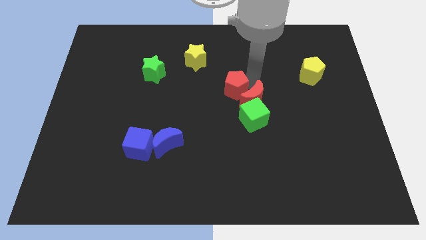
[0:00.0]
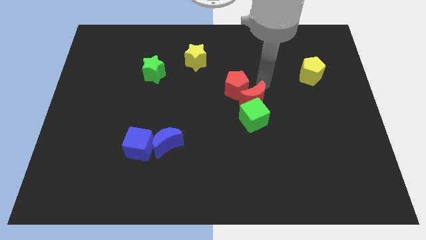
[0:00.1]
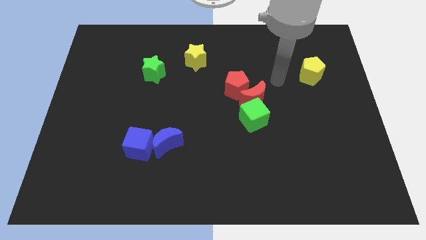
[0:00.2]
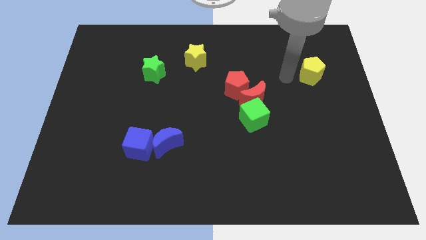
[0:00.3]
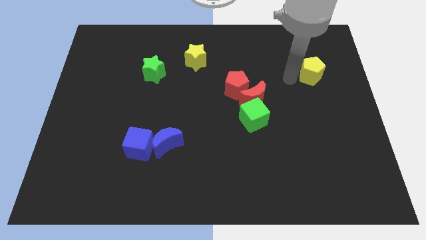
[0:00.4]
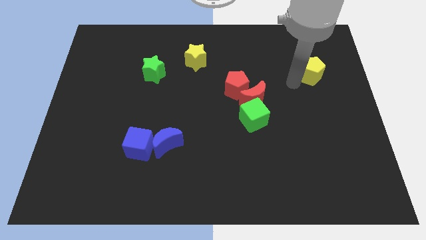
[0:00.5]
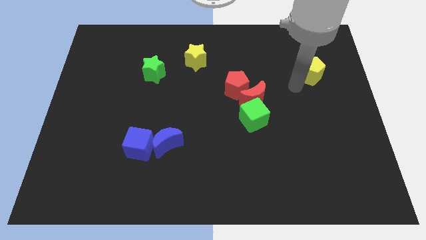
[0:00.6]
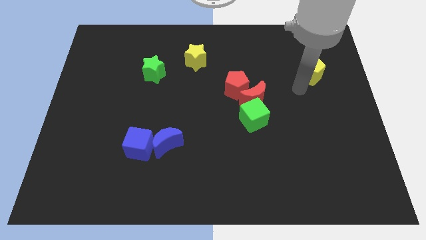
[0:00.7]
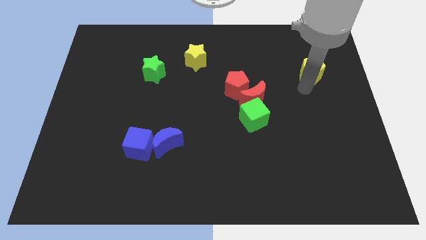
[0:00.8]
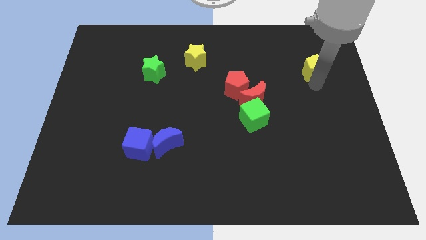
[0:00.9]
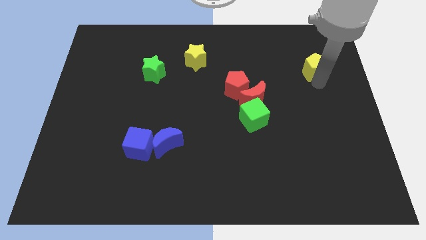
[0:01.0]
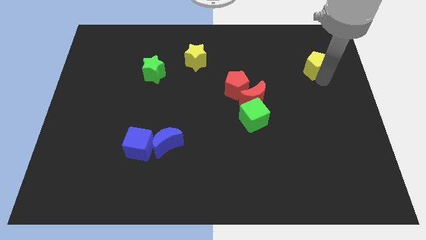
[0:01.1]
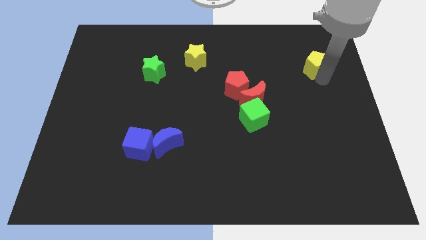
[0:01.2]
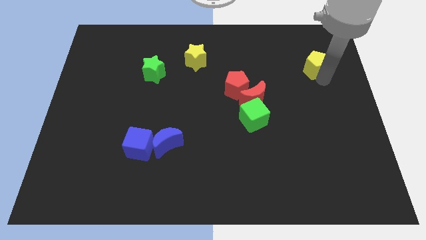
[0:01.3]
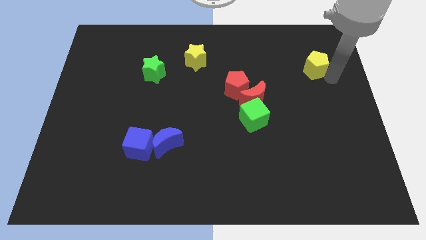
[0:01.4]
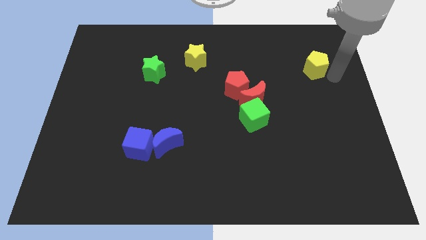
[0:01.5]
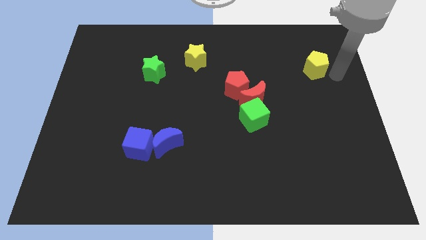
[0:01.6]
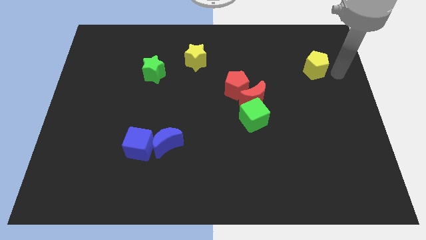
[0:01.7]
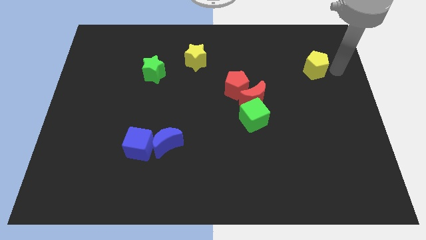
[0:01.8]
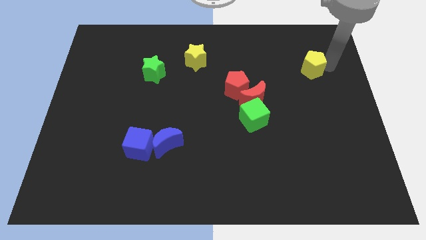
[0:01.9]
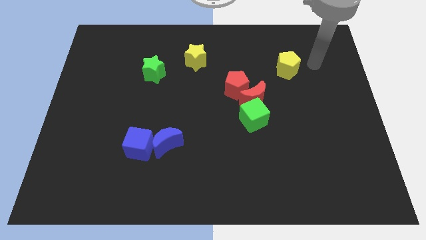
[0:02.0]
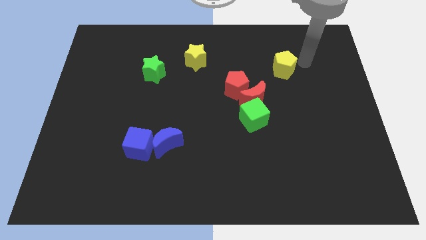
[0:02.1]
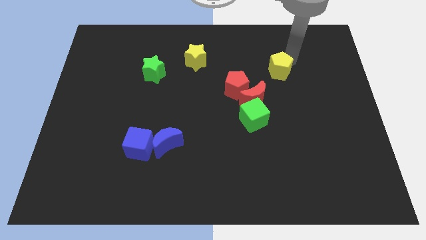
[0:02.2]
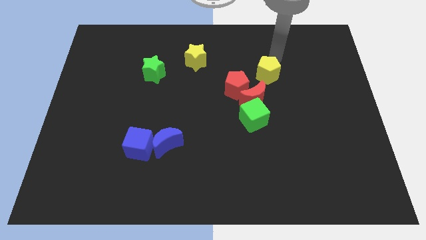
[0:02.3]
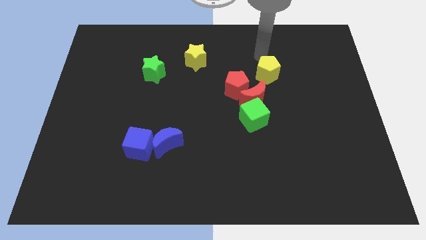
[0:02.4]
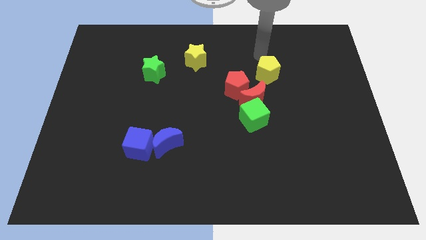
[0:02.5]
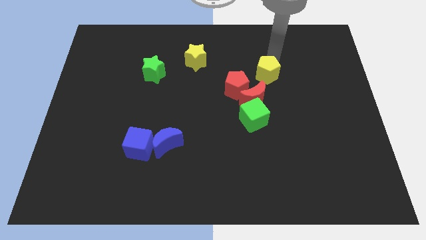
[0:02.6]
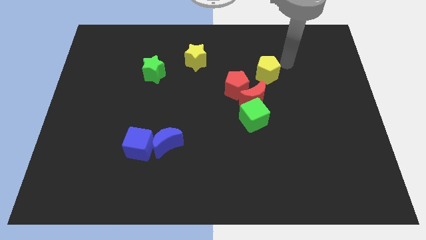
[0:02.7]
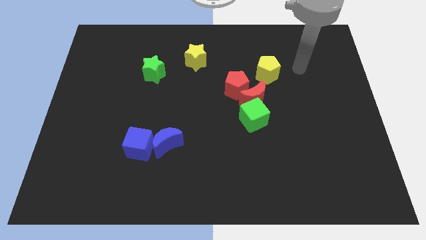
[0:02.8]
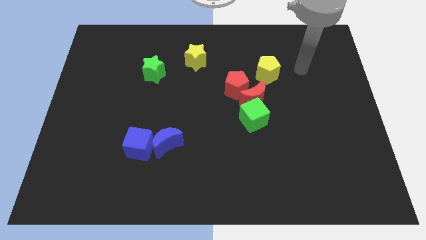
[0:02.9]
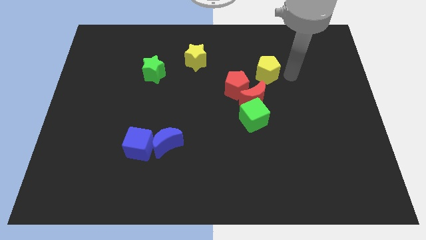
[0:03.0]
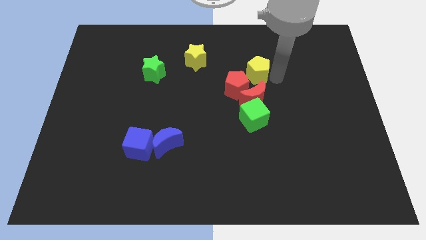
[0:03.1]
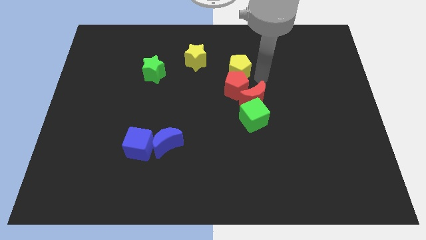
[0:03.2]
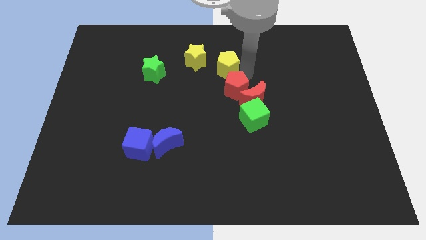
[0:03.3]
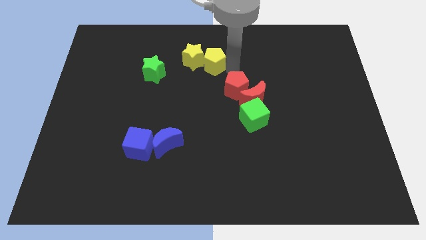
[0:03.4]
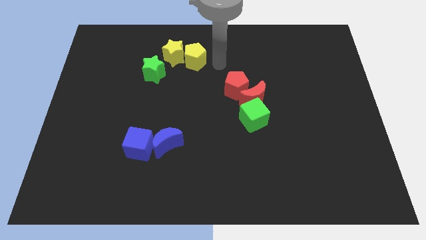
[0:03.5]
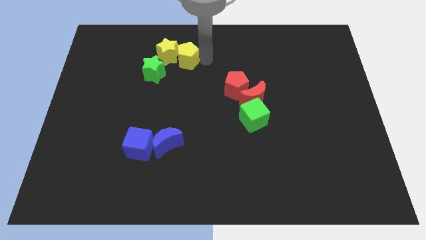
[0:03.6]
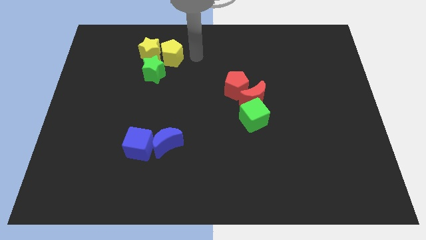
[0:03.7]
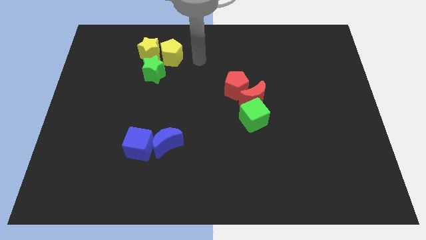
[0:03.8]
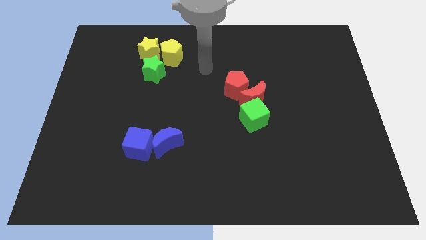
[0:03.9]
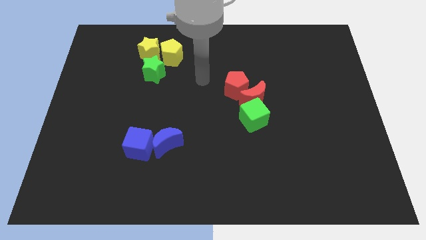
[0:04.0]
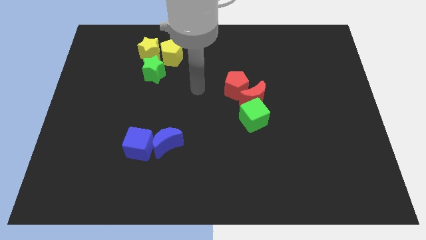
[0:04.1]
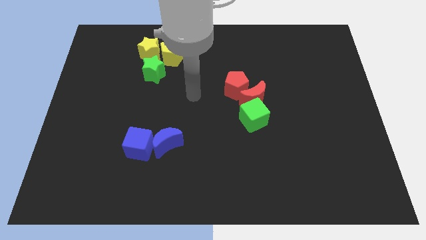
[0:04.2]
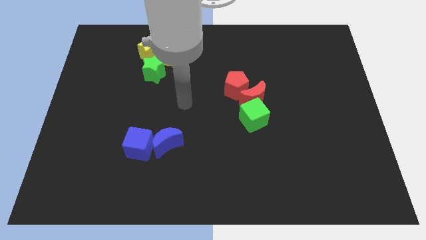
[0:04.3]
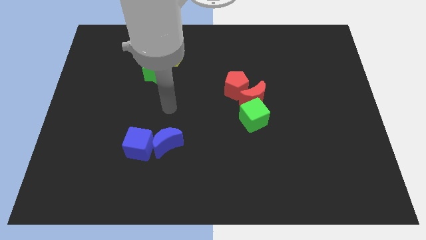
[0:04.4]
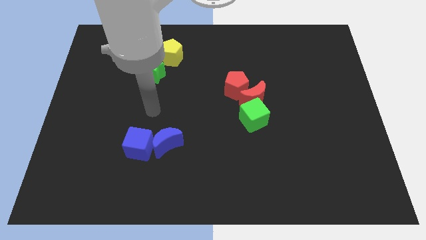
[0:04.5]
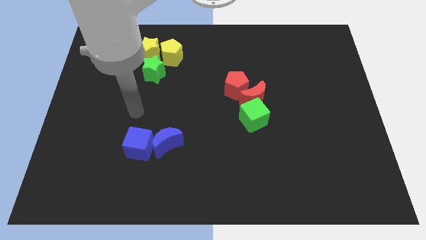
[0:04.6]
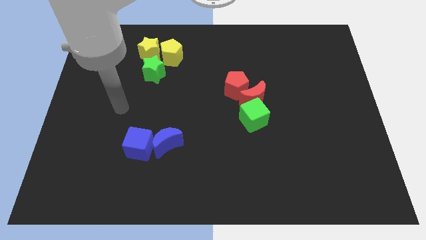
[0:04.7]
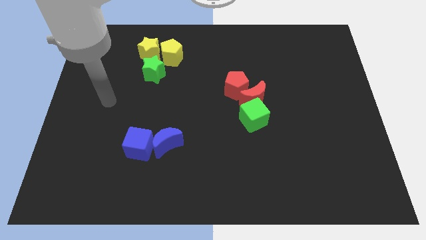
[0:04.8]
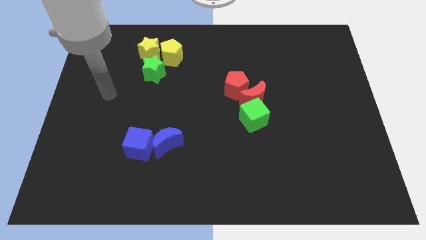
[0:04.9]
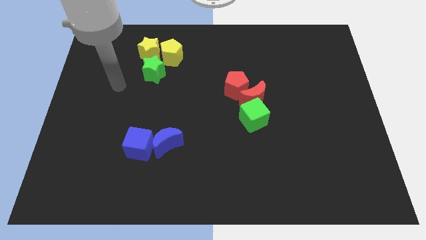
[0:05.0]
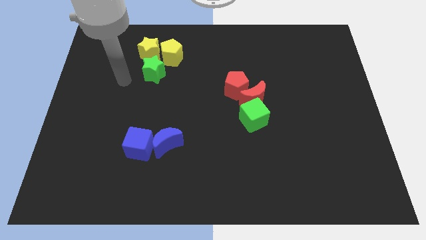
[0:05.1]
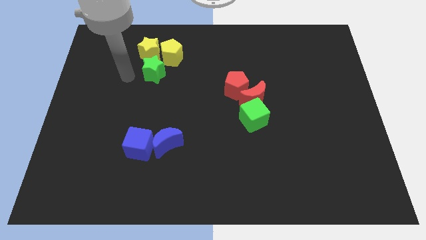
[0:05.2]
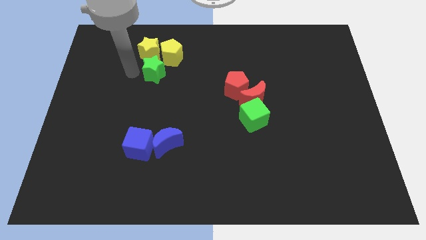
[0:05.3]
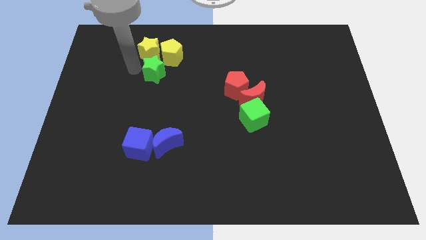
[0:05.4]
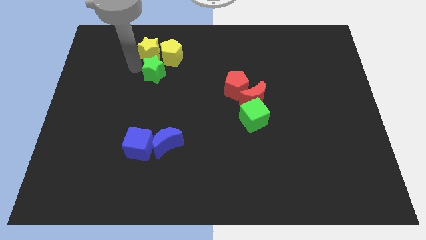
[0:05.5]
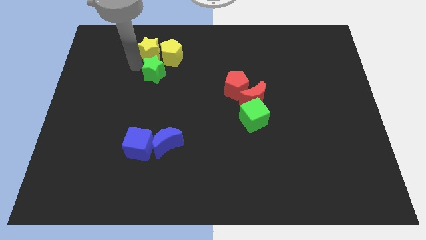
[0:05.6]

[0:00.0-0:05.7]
place the yellow pentagon and star above the green star

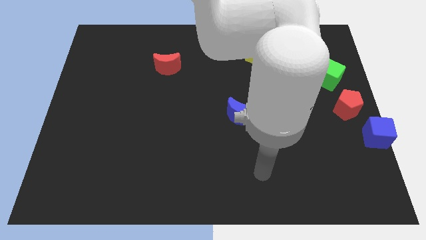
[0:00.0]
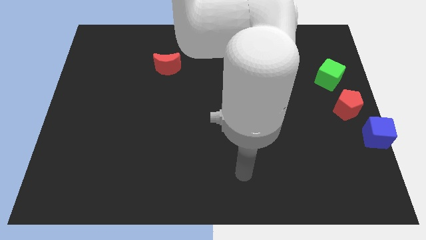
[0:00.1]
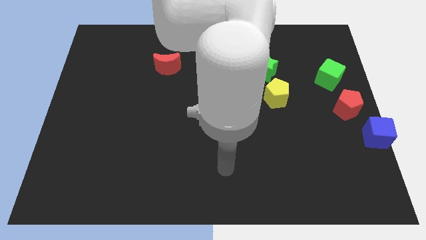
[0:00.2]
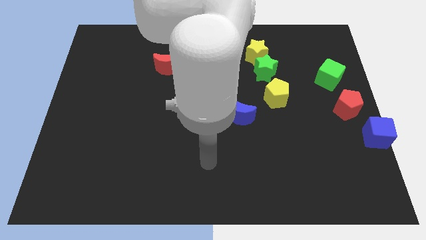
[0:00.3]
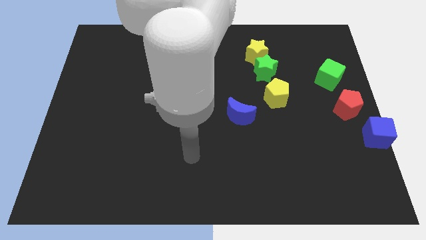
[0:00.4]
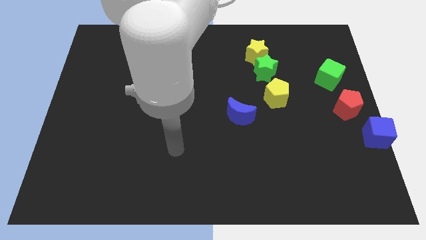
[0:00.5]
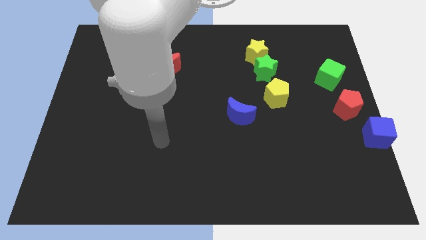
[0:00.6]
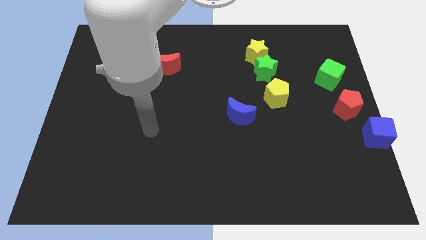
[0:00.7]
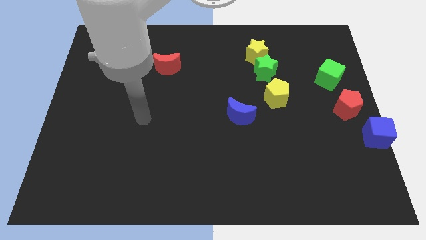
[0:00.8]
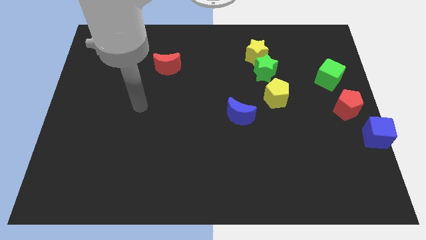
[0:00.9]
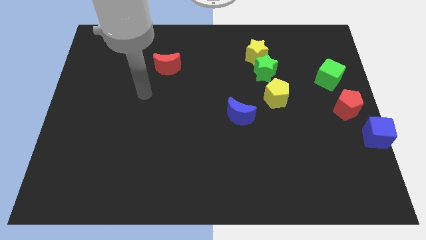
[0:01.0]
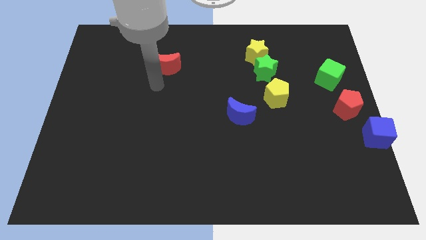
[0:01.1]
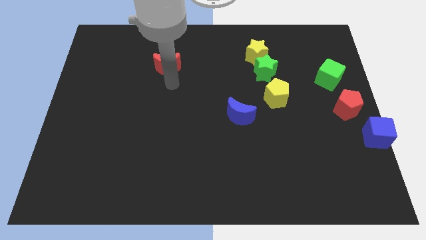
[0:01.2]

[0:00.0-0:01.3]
point your arm at the bottom of the red crescent

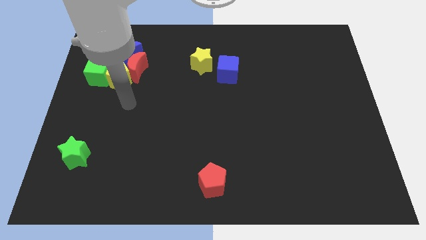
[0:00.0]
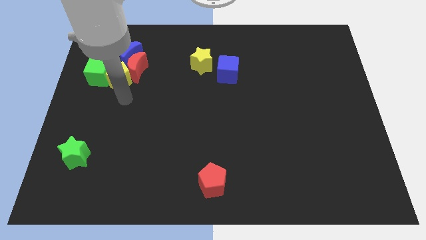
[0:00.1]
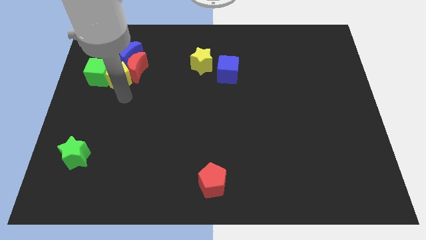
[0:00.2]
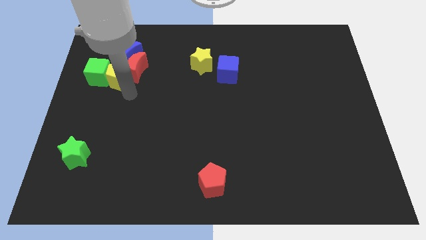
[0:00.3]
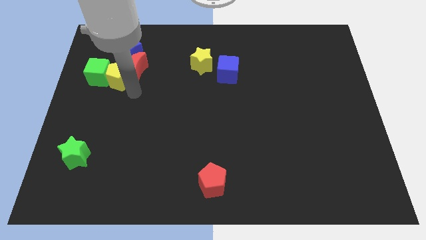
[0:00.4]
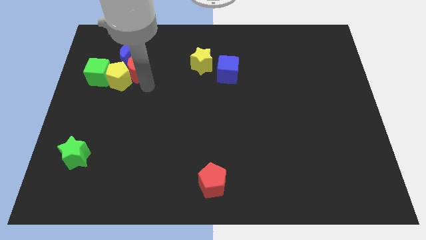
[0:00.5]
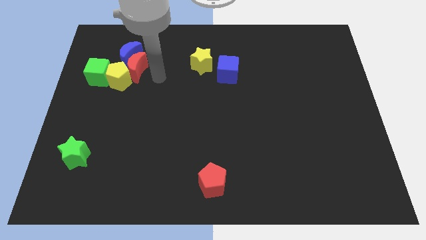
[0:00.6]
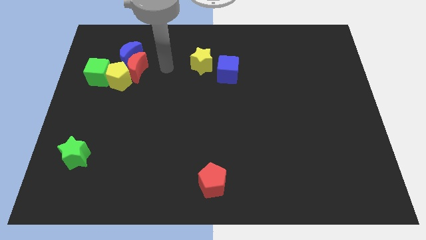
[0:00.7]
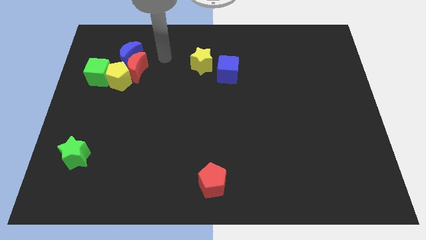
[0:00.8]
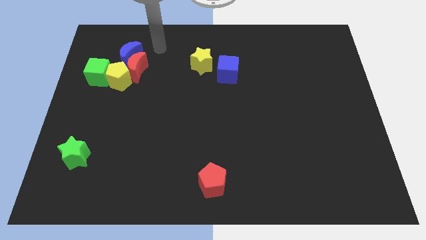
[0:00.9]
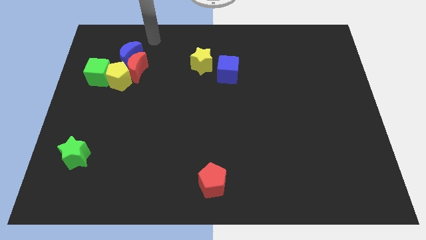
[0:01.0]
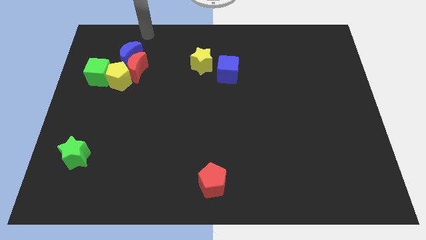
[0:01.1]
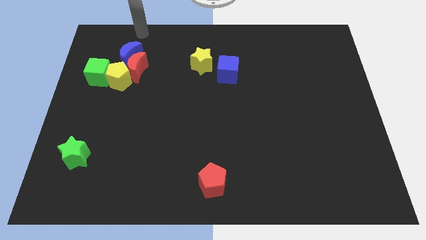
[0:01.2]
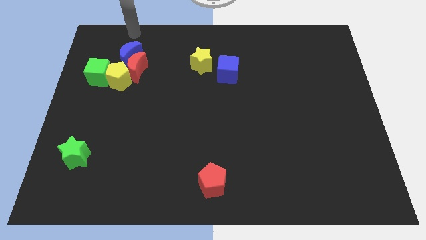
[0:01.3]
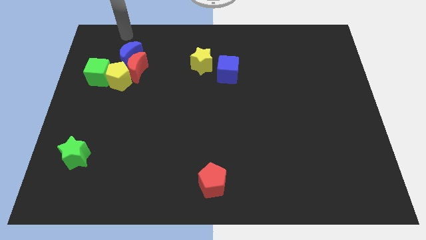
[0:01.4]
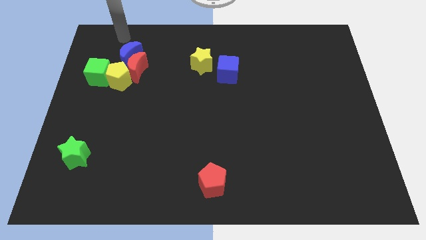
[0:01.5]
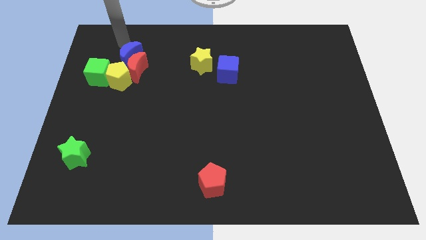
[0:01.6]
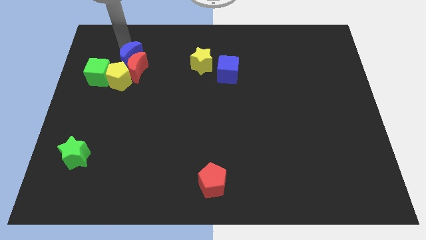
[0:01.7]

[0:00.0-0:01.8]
point your arm near blue moon
